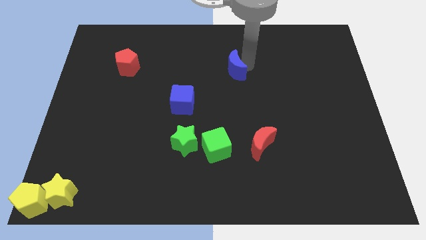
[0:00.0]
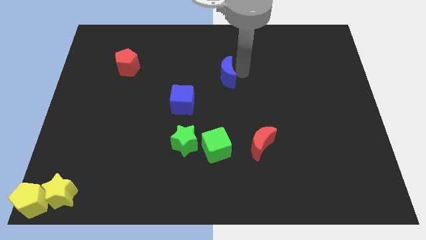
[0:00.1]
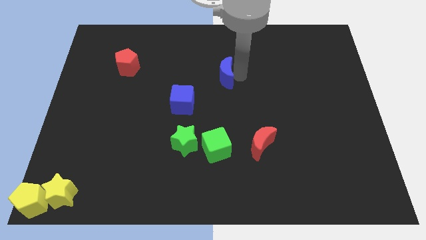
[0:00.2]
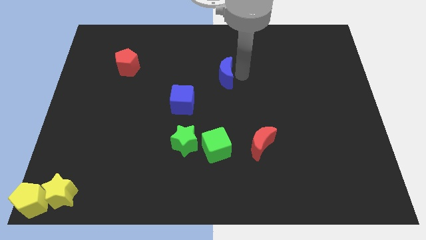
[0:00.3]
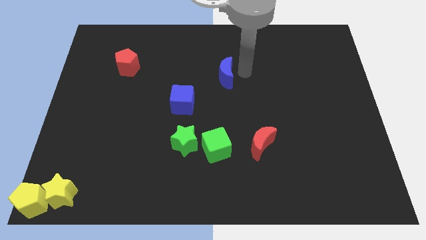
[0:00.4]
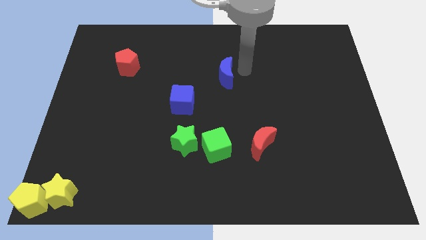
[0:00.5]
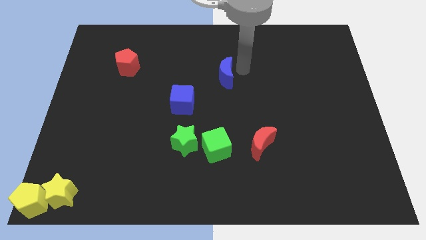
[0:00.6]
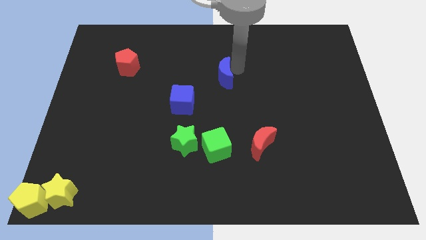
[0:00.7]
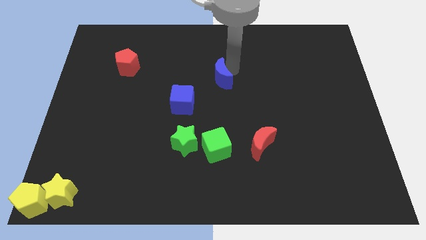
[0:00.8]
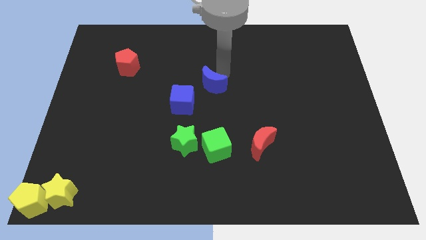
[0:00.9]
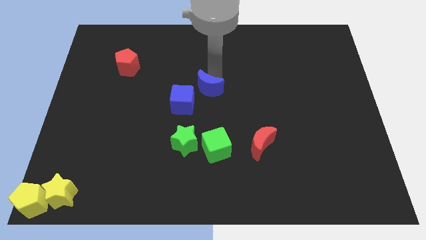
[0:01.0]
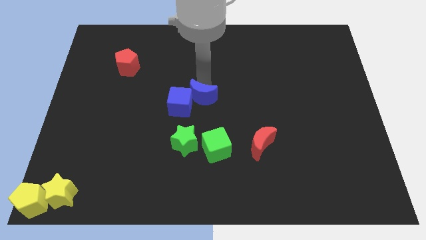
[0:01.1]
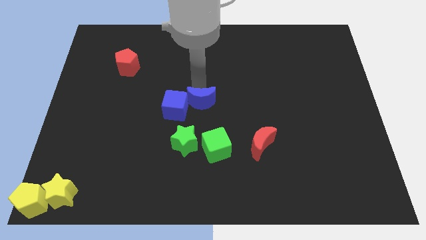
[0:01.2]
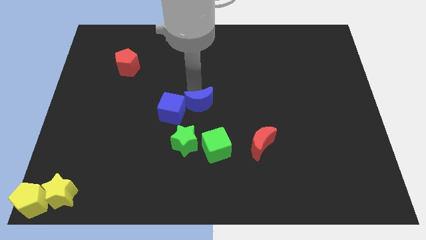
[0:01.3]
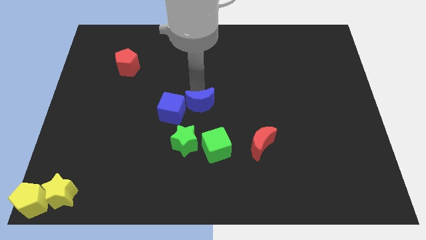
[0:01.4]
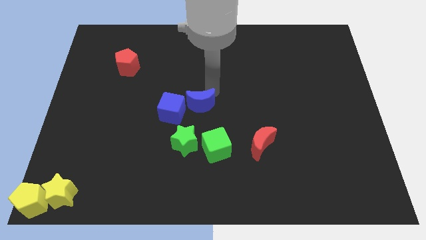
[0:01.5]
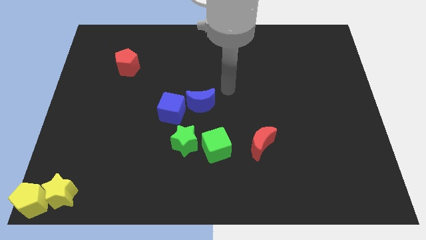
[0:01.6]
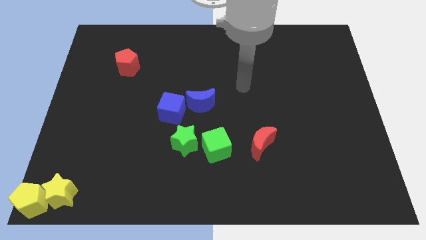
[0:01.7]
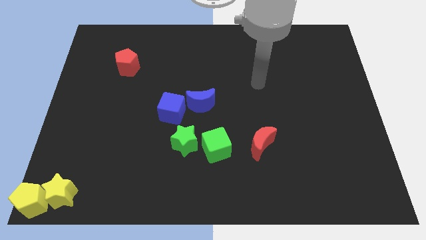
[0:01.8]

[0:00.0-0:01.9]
move the blue crescent to the center of the board

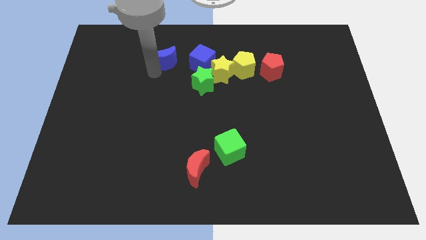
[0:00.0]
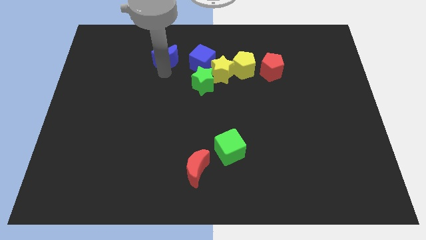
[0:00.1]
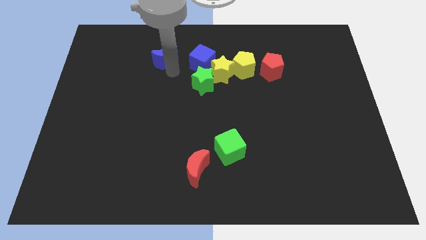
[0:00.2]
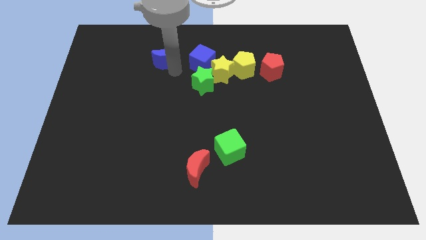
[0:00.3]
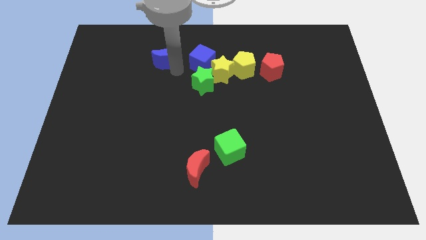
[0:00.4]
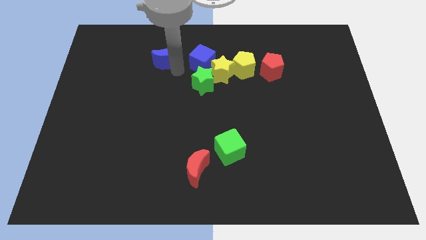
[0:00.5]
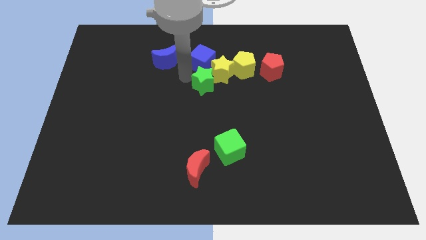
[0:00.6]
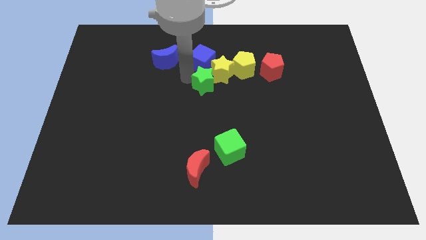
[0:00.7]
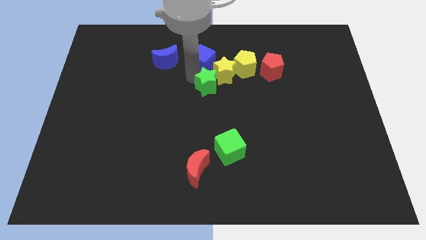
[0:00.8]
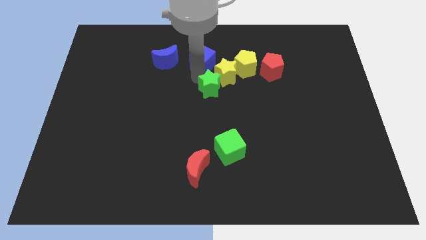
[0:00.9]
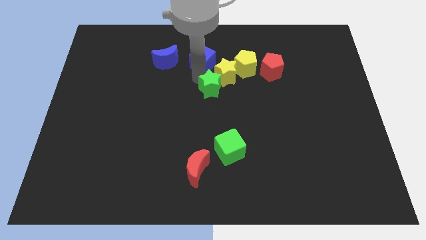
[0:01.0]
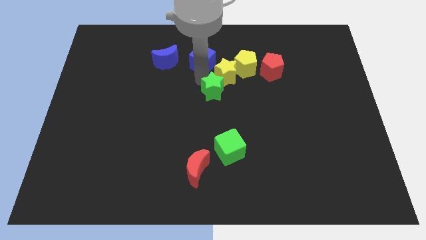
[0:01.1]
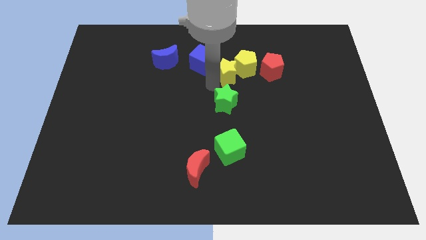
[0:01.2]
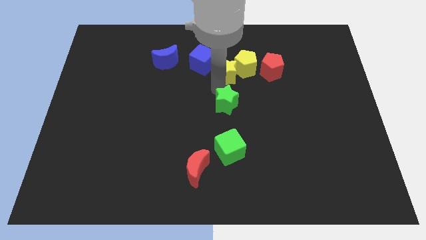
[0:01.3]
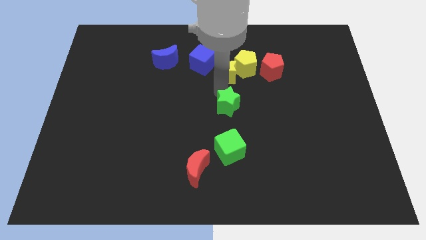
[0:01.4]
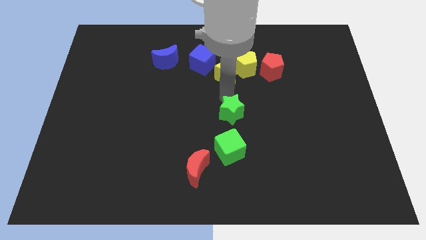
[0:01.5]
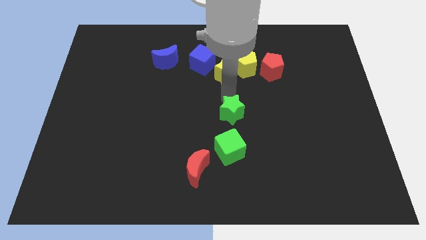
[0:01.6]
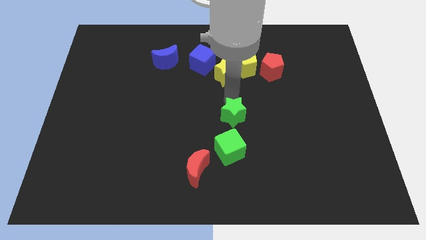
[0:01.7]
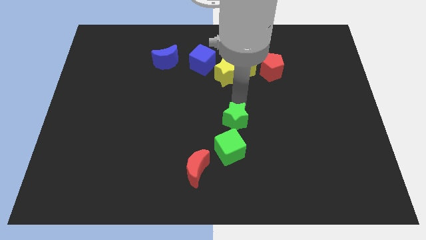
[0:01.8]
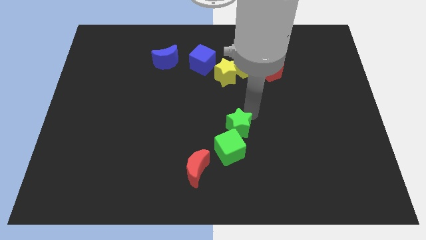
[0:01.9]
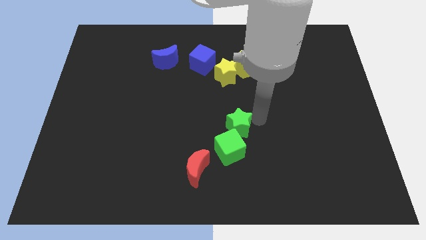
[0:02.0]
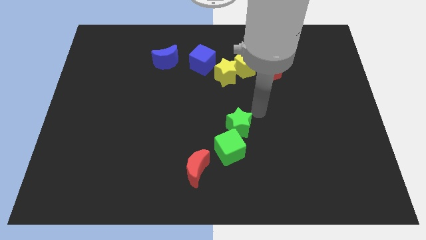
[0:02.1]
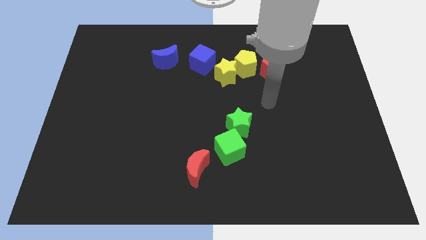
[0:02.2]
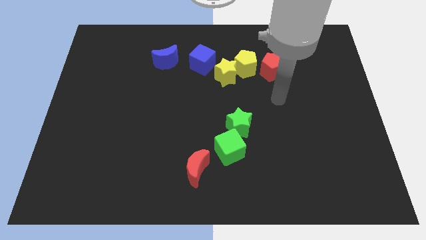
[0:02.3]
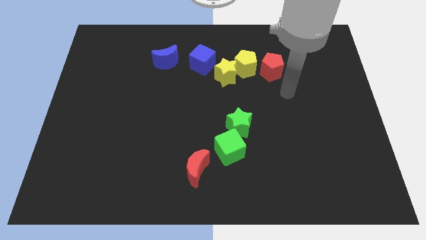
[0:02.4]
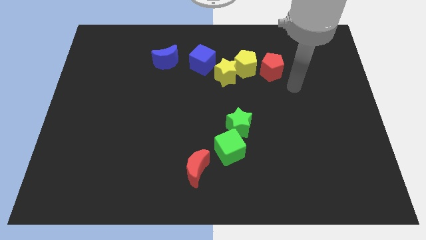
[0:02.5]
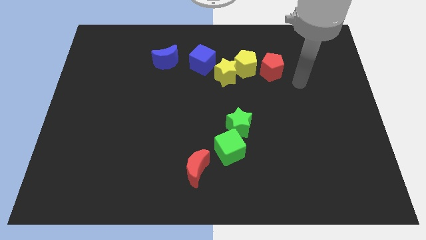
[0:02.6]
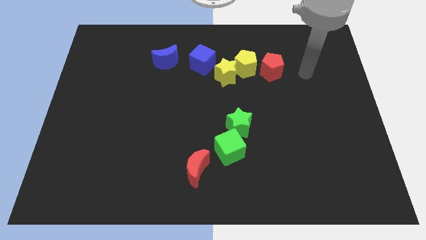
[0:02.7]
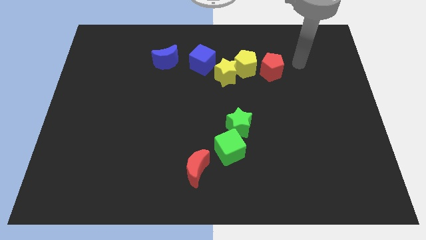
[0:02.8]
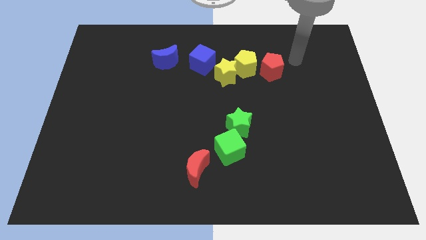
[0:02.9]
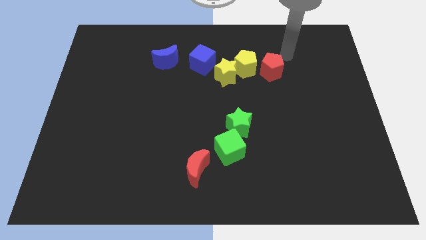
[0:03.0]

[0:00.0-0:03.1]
place the green star at the top side of the green cube

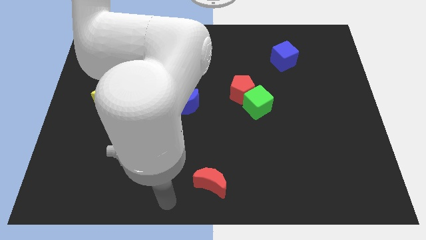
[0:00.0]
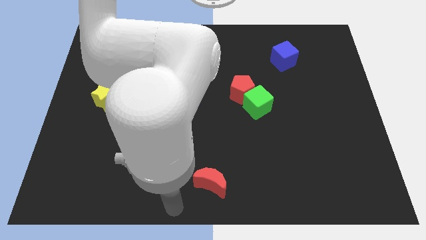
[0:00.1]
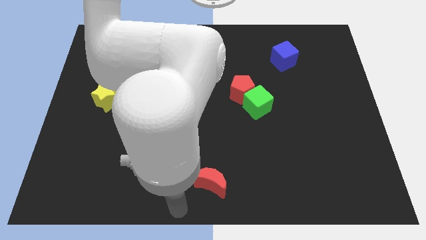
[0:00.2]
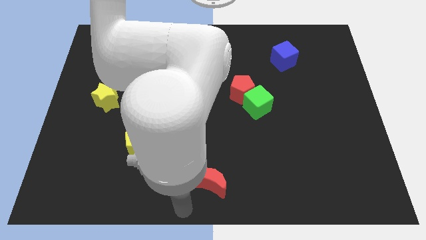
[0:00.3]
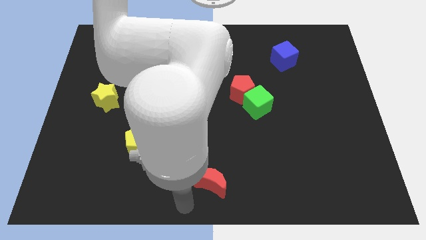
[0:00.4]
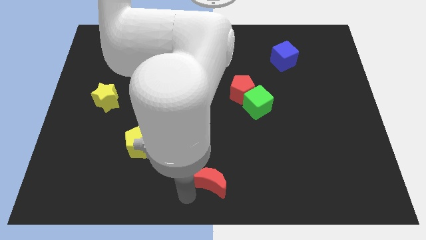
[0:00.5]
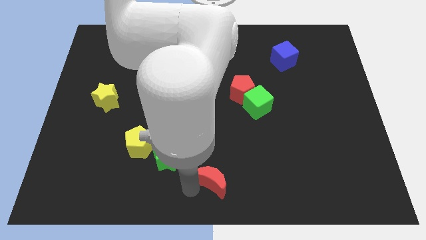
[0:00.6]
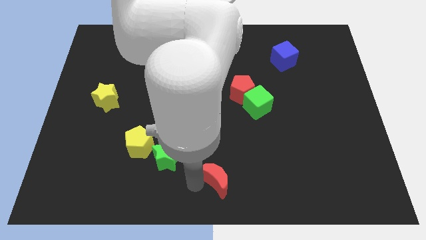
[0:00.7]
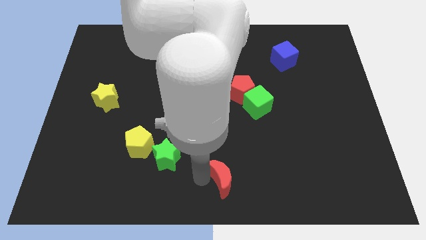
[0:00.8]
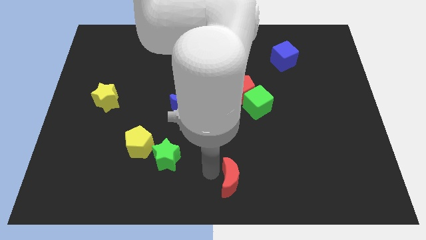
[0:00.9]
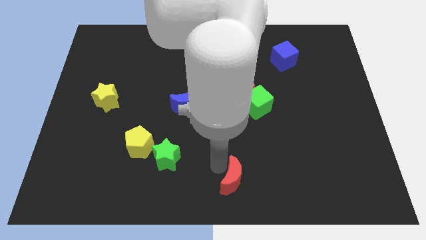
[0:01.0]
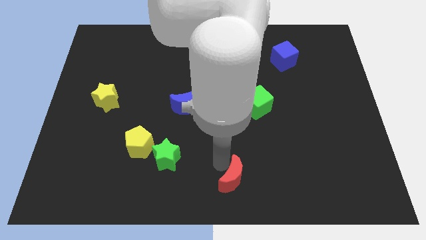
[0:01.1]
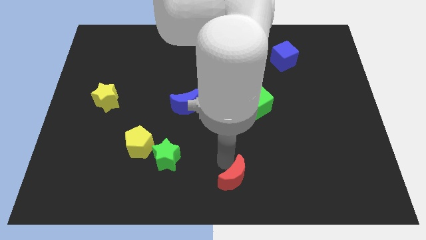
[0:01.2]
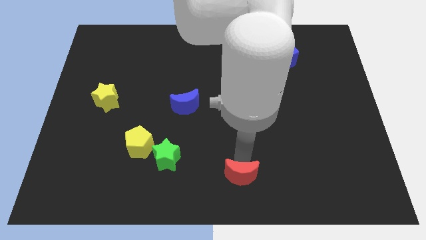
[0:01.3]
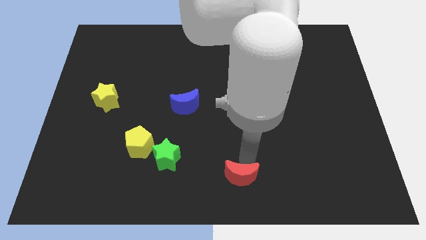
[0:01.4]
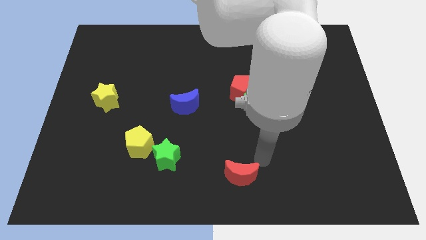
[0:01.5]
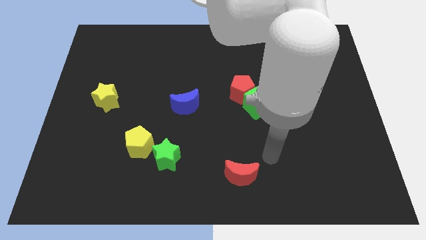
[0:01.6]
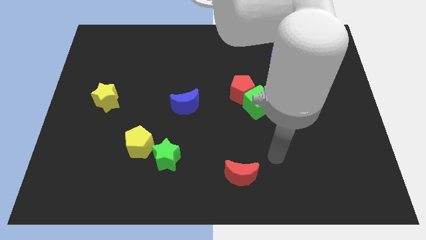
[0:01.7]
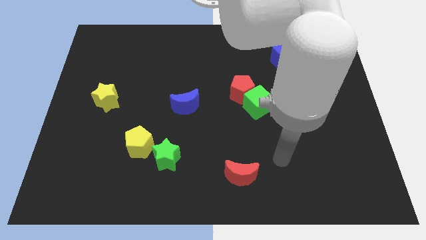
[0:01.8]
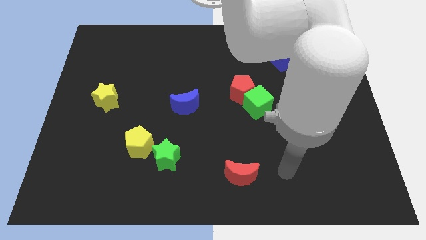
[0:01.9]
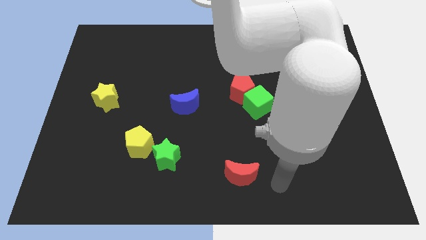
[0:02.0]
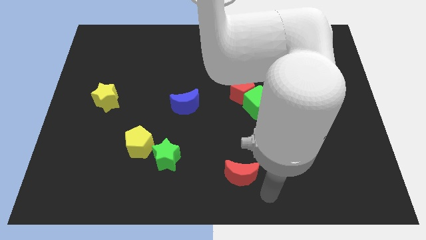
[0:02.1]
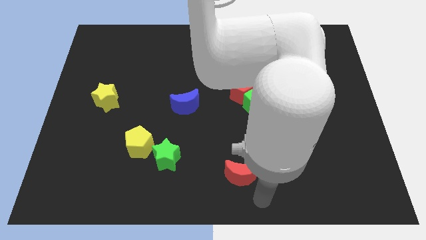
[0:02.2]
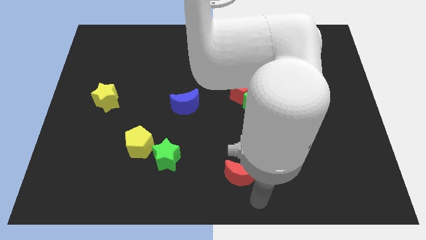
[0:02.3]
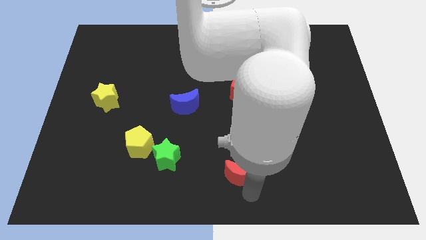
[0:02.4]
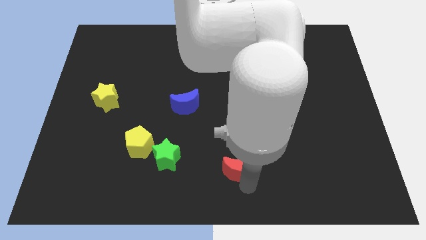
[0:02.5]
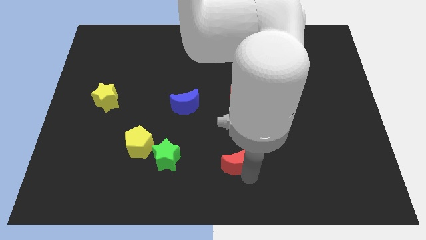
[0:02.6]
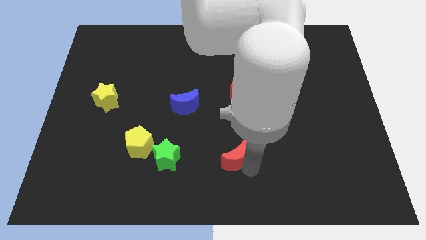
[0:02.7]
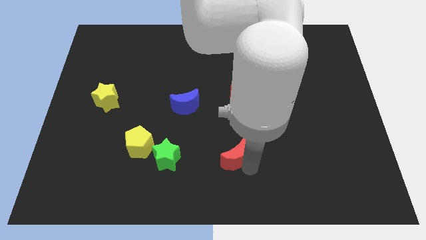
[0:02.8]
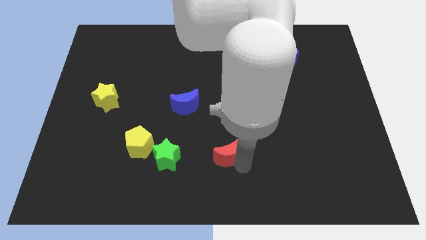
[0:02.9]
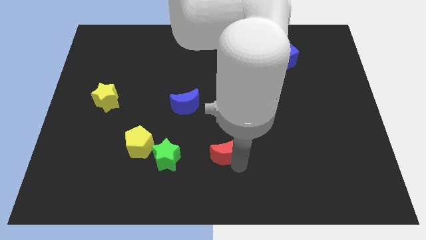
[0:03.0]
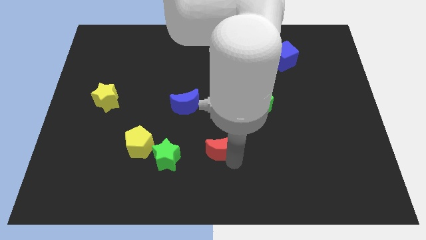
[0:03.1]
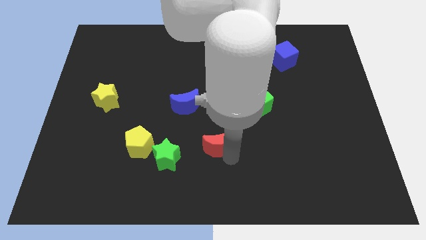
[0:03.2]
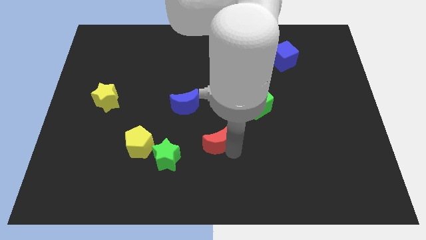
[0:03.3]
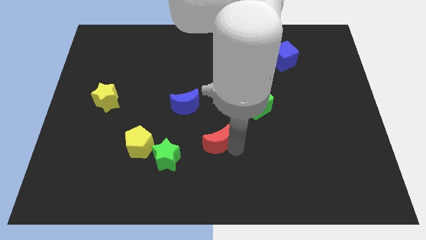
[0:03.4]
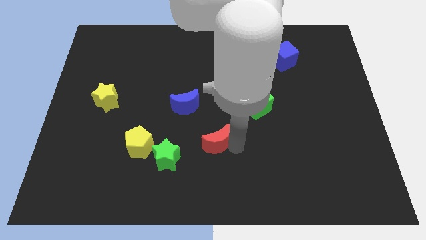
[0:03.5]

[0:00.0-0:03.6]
move the red moon diagonally above the top right side of the green star

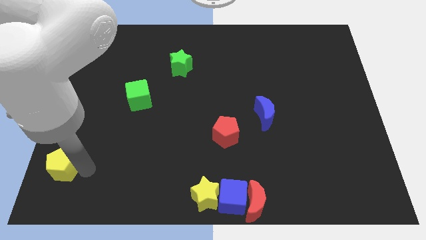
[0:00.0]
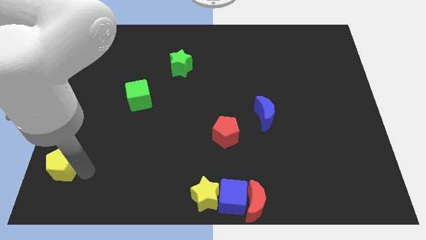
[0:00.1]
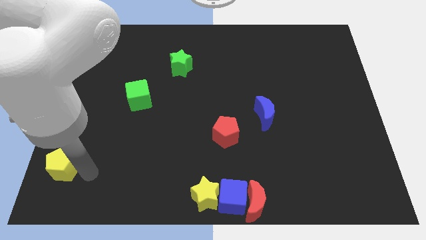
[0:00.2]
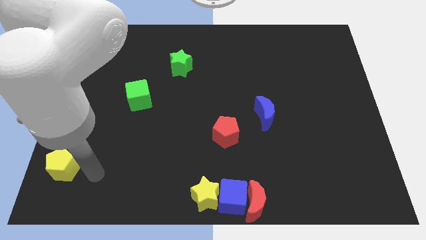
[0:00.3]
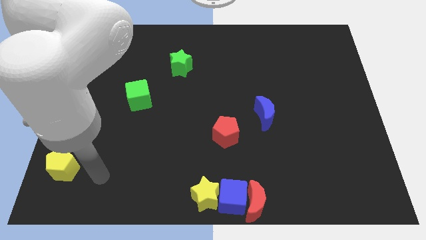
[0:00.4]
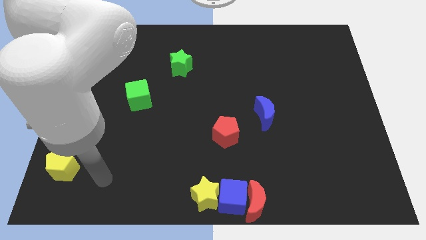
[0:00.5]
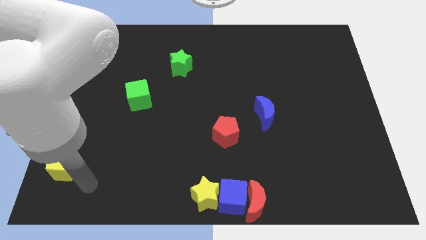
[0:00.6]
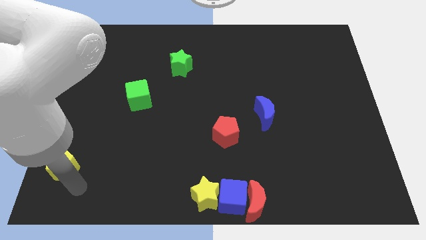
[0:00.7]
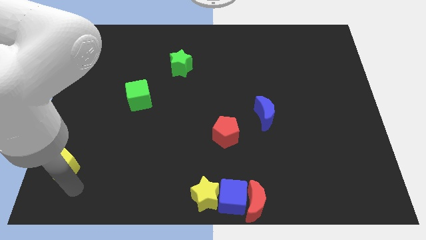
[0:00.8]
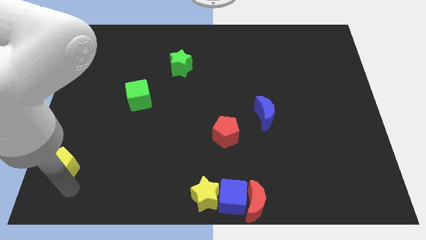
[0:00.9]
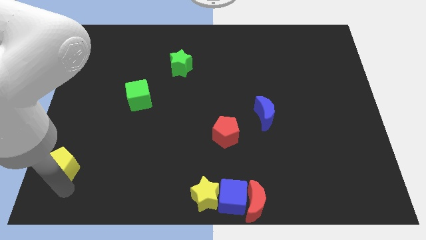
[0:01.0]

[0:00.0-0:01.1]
place arm below yellow pentagon
